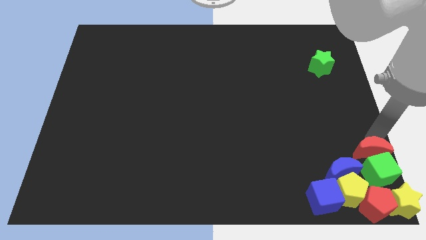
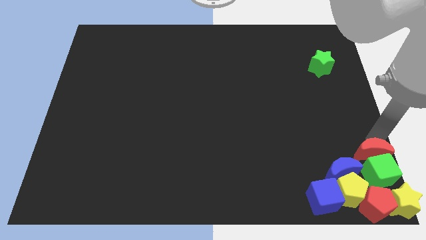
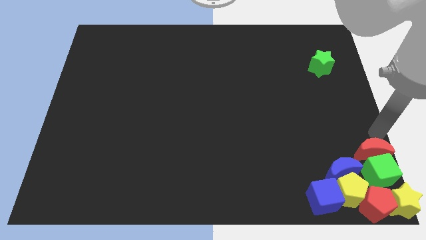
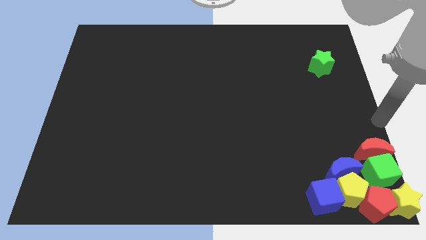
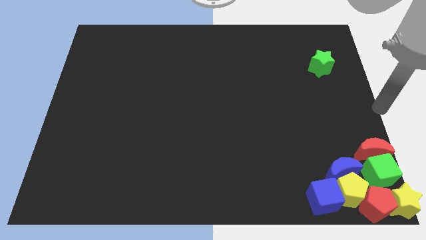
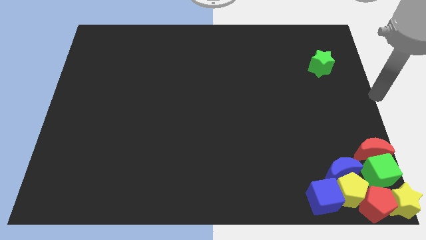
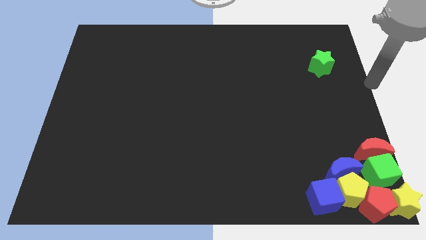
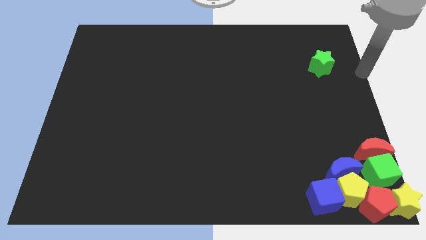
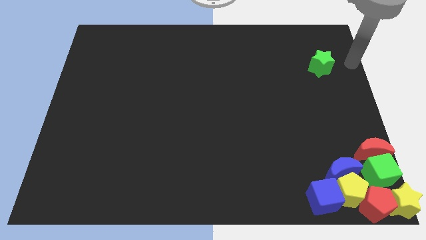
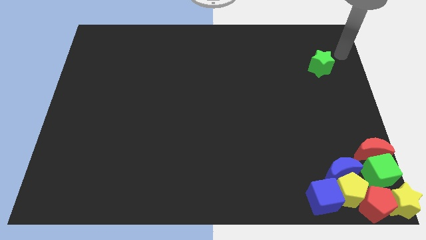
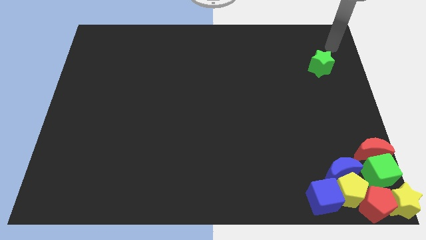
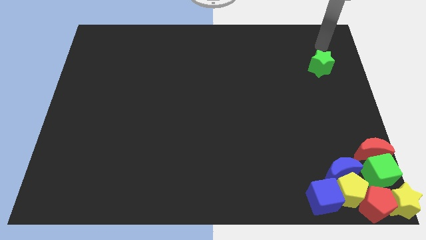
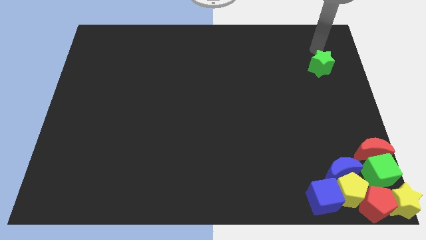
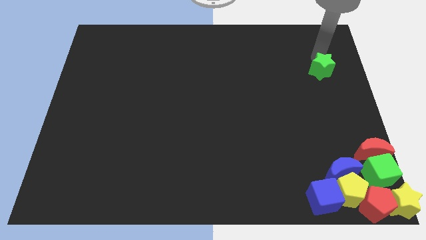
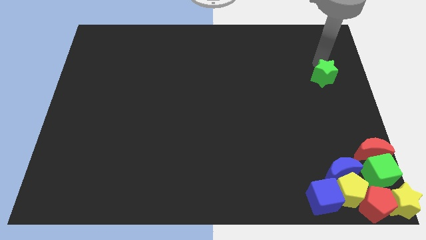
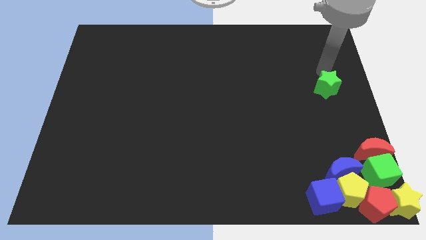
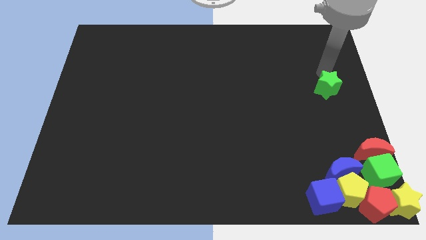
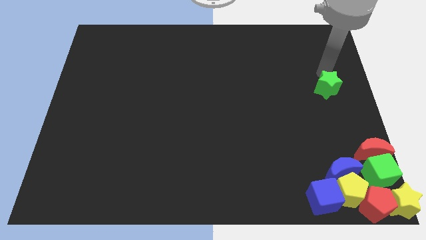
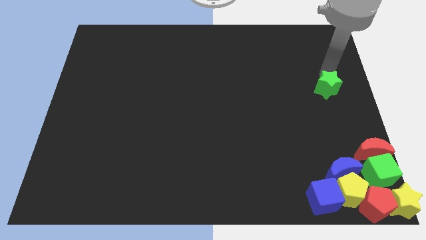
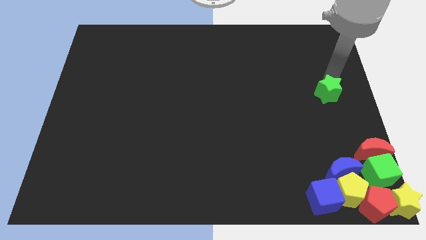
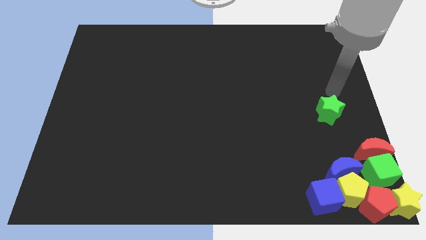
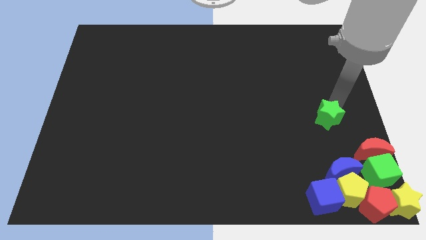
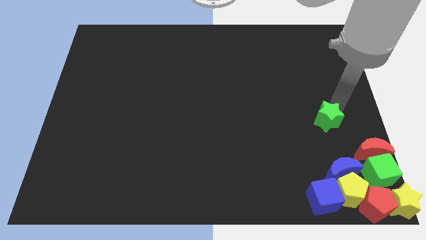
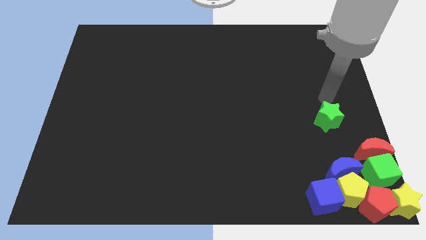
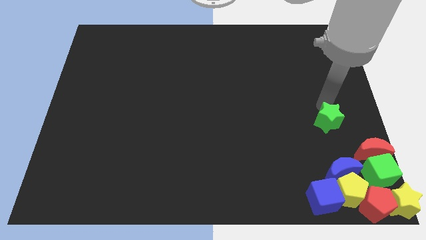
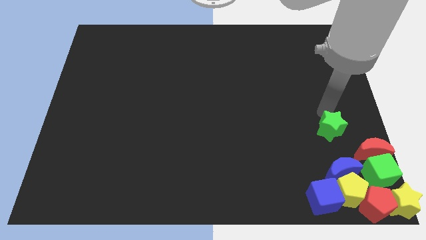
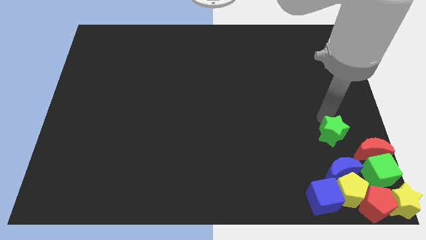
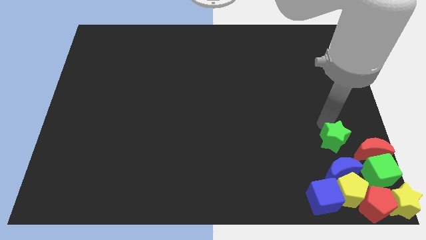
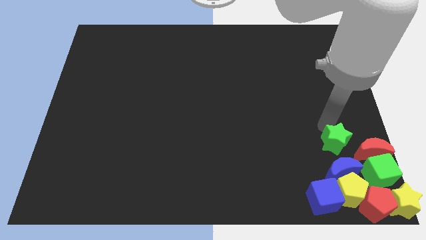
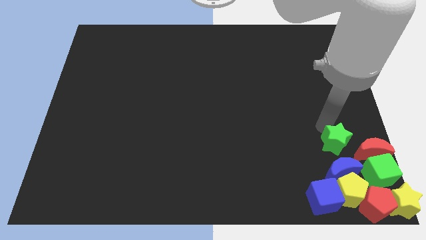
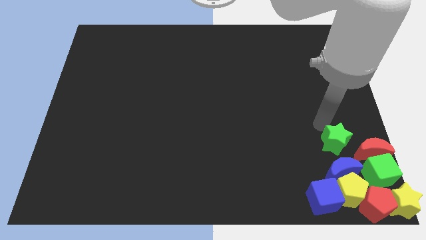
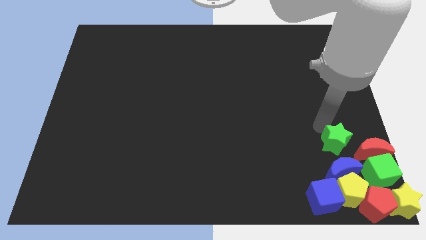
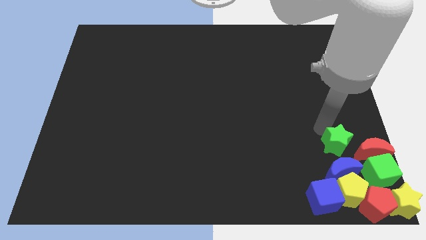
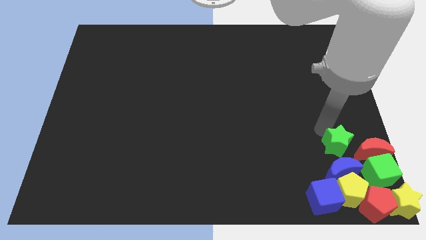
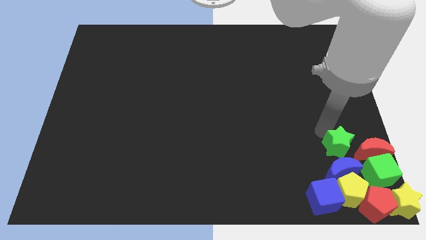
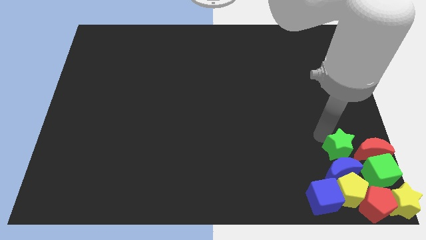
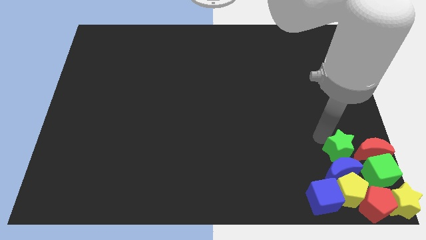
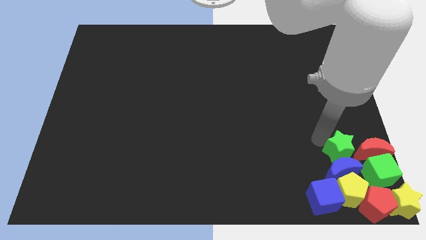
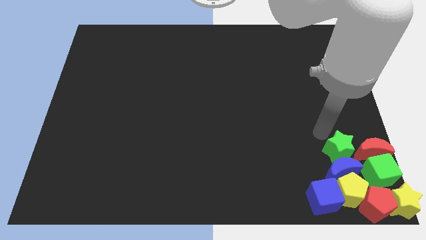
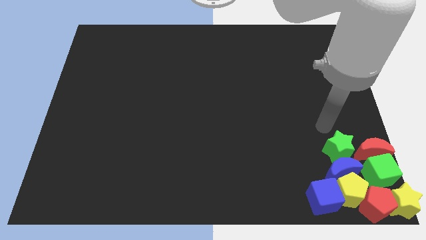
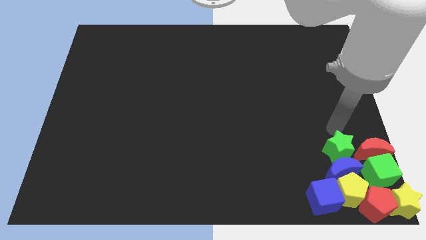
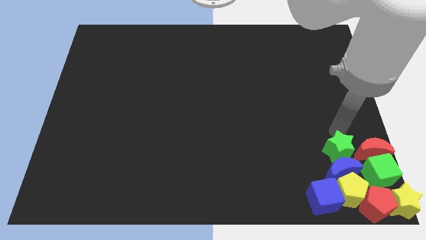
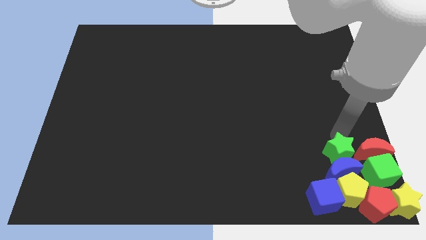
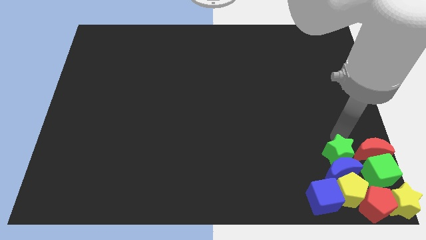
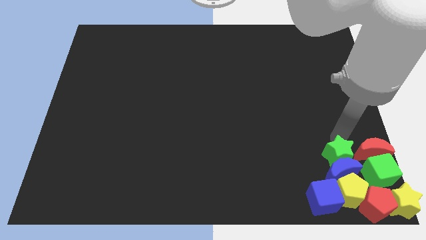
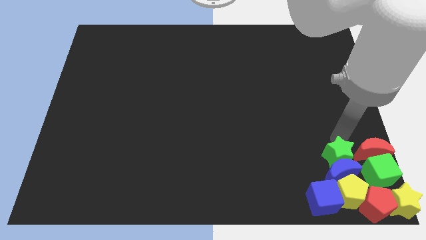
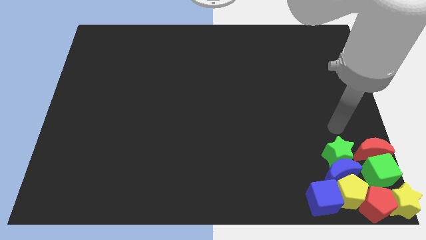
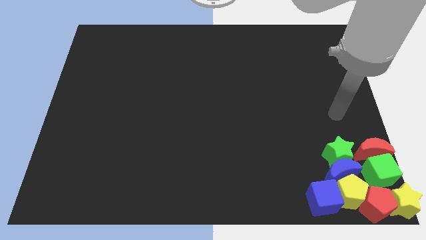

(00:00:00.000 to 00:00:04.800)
move the green star to the bottom right of the board

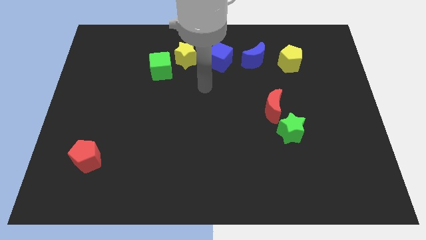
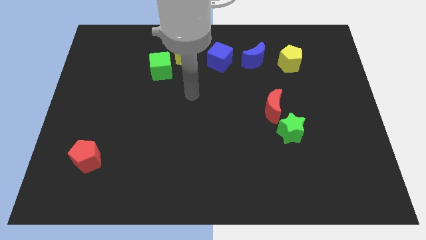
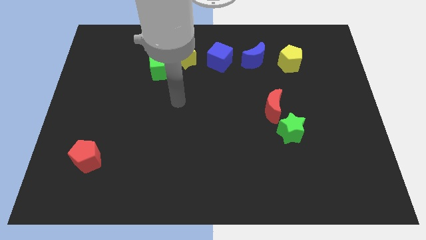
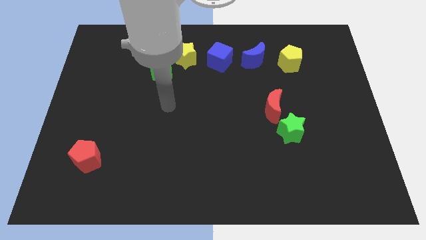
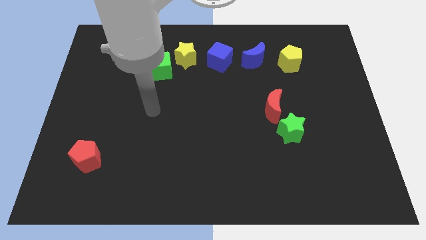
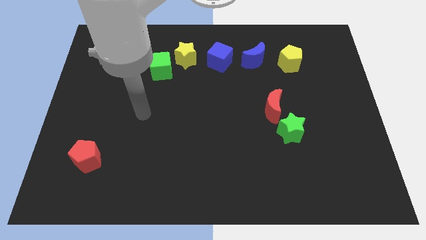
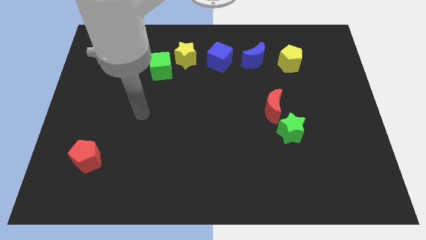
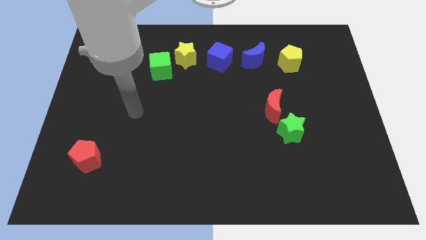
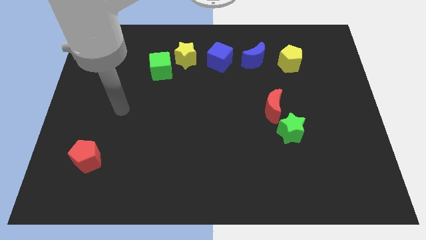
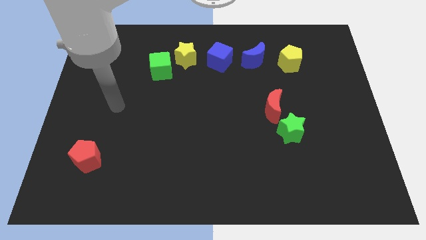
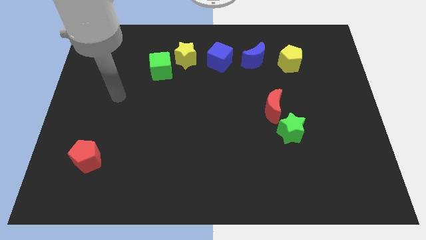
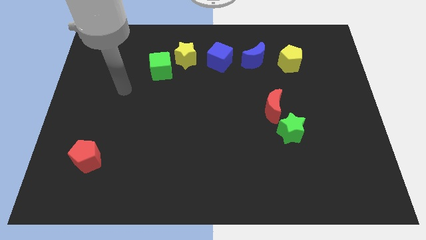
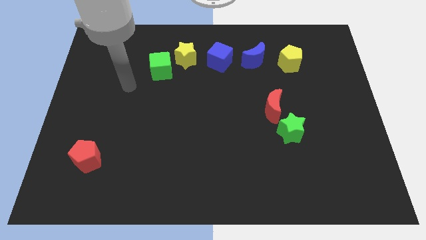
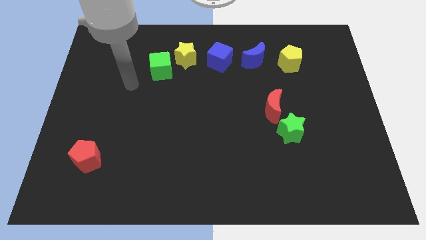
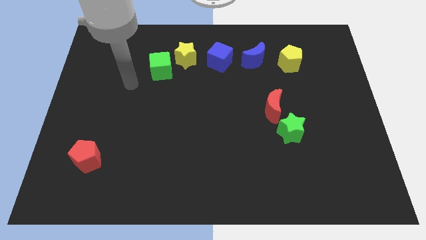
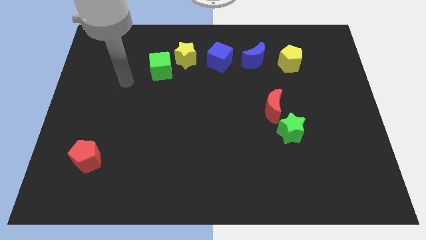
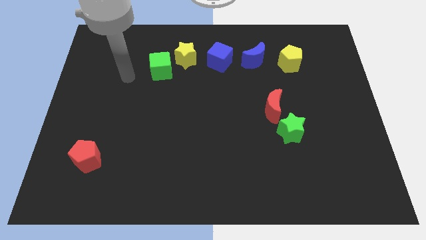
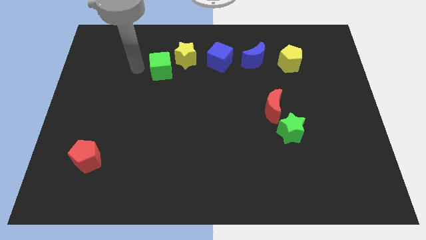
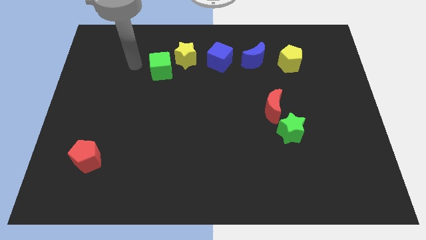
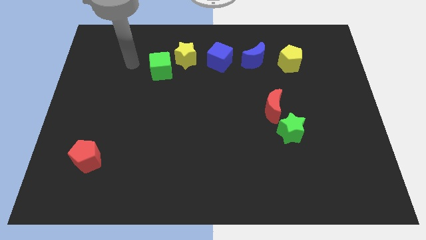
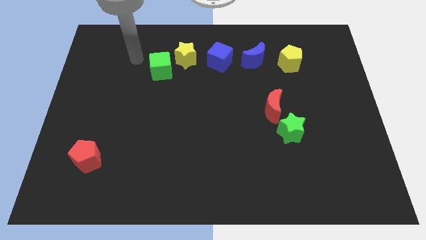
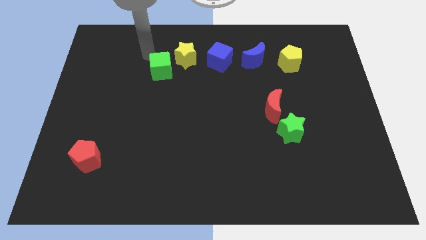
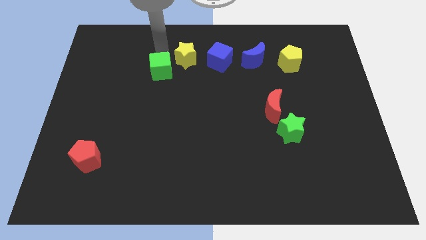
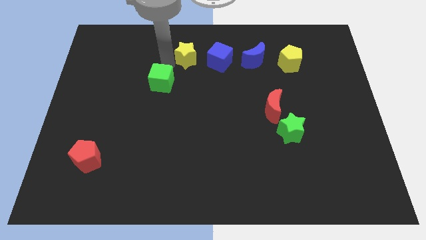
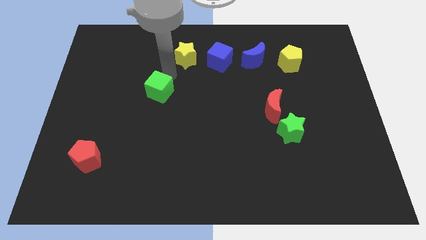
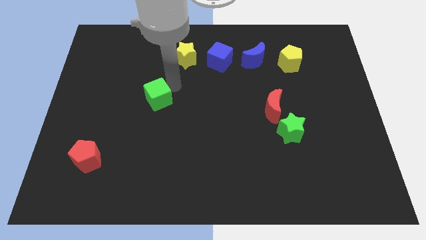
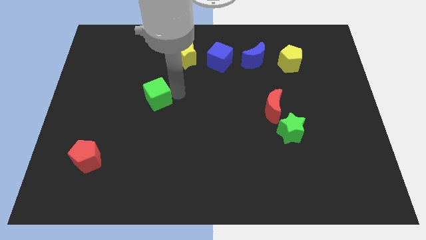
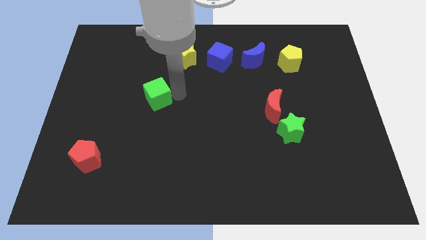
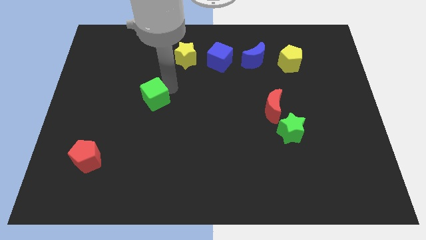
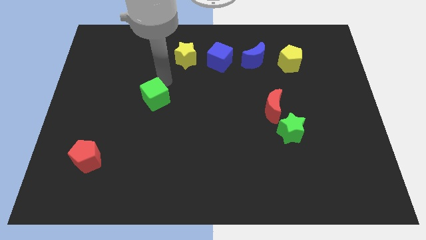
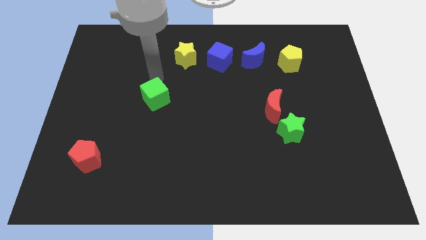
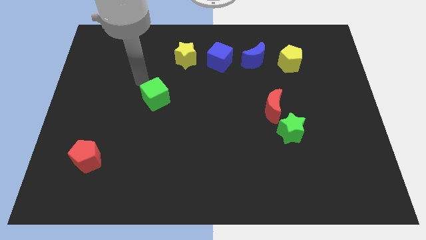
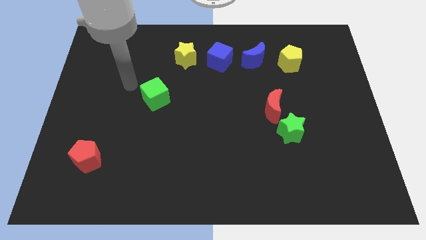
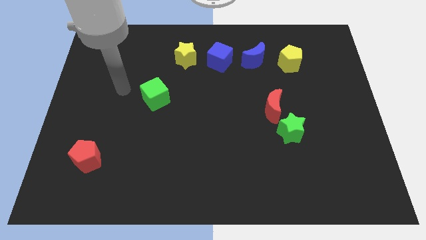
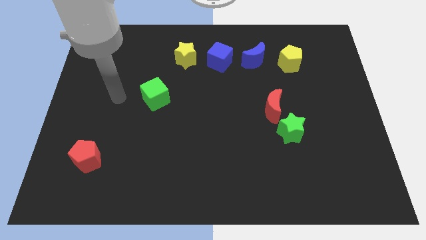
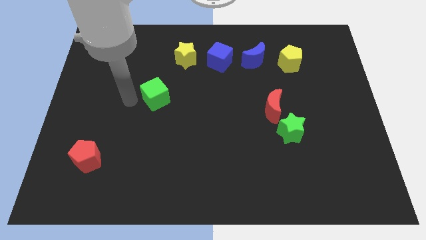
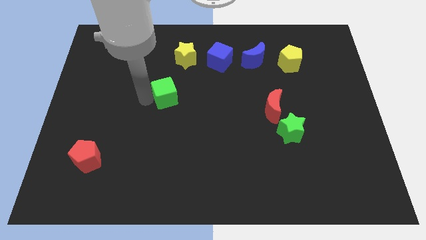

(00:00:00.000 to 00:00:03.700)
place the green cube diagonally to the left of the yellow star

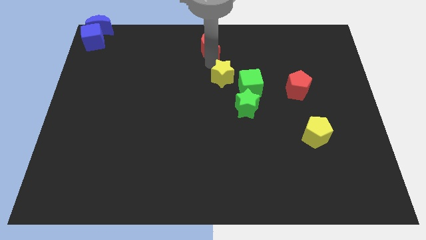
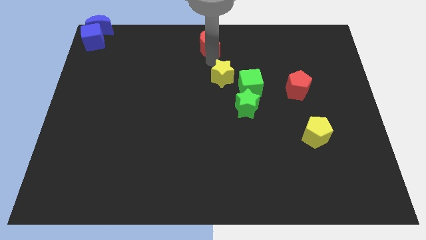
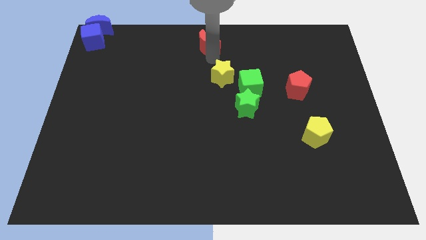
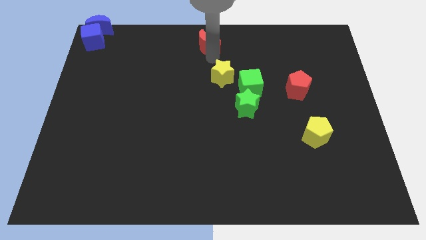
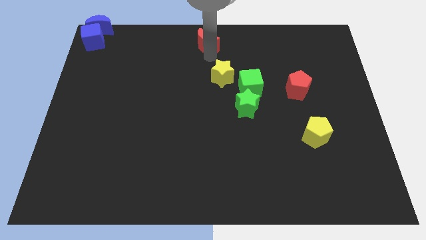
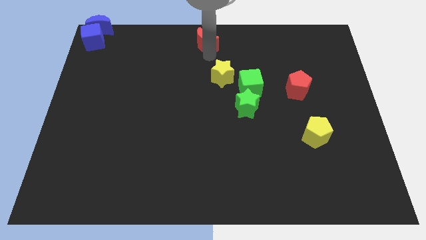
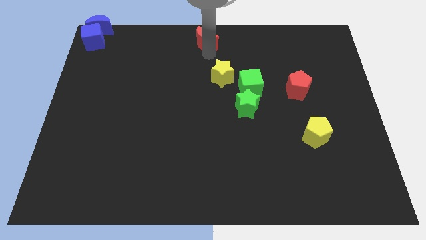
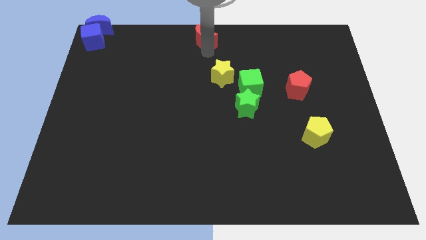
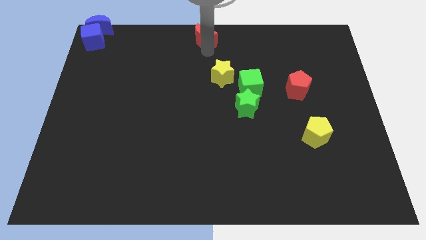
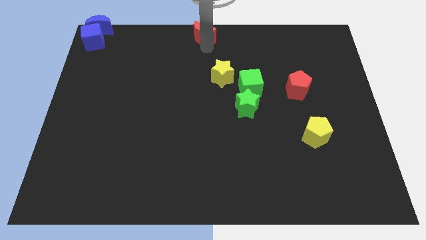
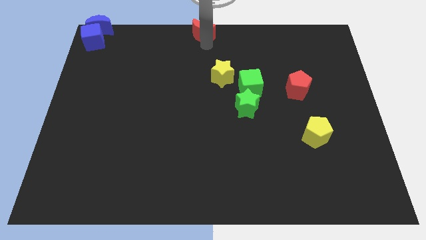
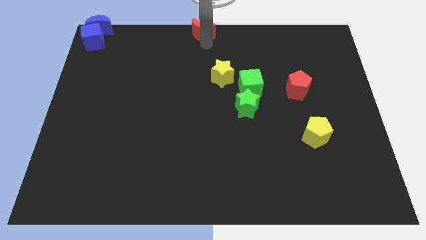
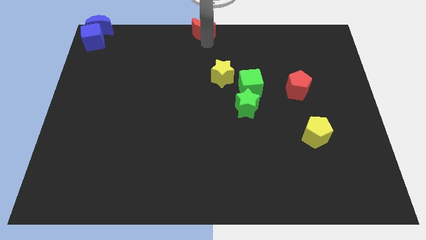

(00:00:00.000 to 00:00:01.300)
place the red crescent at the top center of the board
